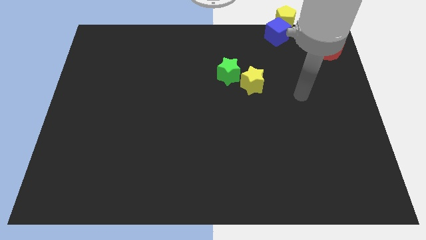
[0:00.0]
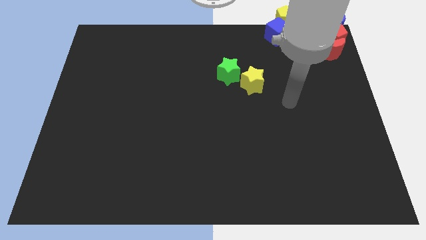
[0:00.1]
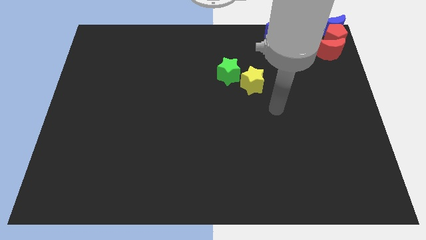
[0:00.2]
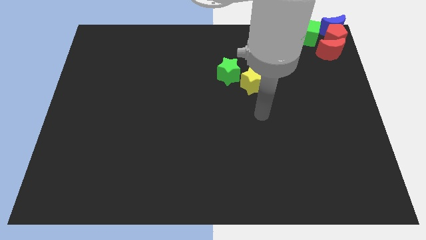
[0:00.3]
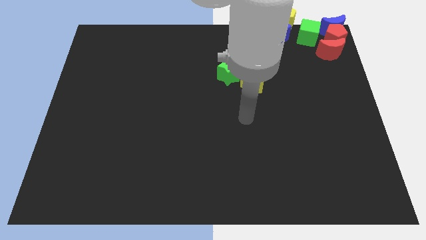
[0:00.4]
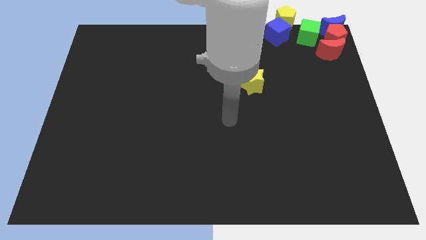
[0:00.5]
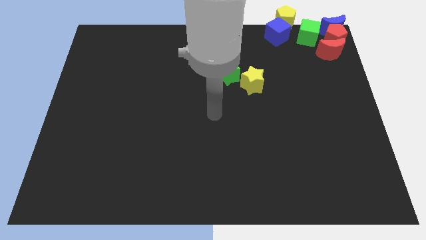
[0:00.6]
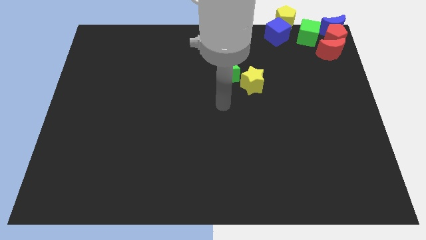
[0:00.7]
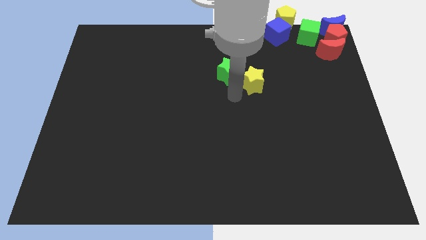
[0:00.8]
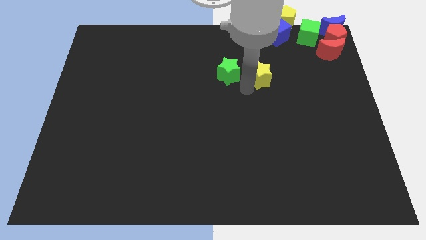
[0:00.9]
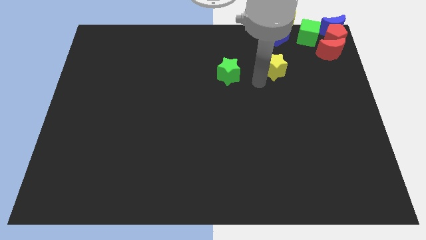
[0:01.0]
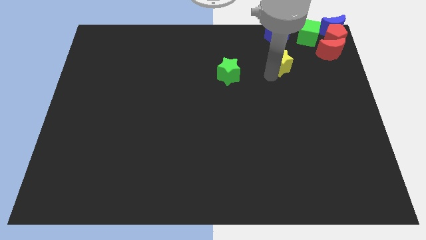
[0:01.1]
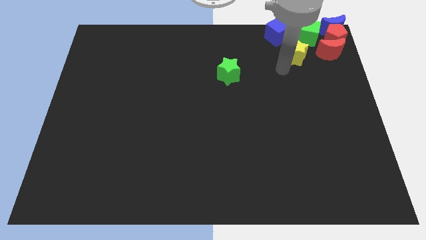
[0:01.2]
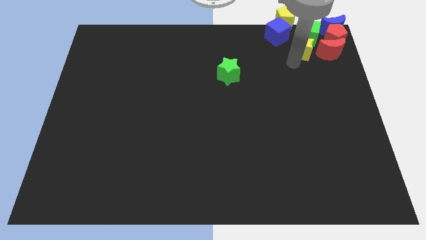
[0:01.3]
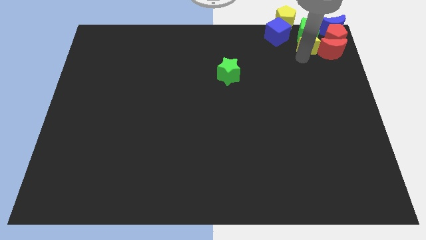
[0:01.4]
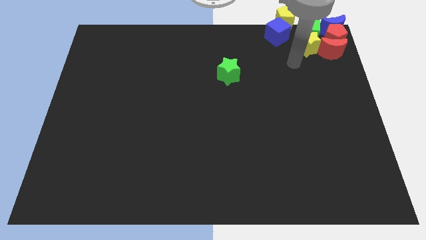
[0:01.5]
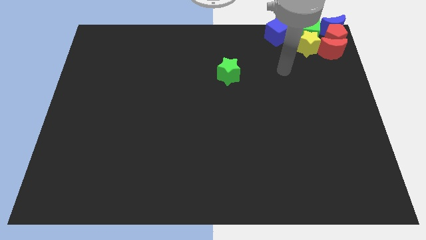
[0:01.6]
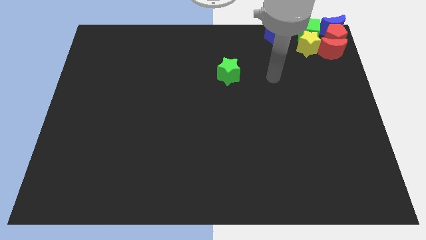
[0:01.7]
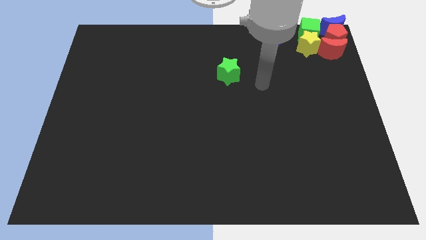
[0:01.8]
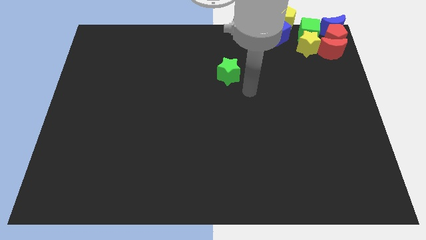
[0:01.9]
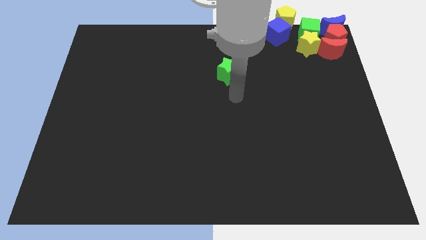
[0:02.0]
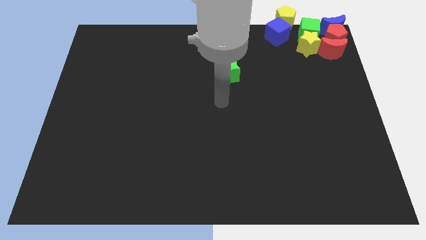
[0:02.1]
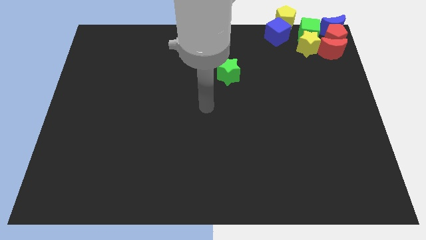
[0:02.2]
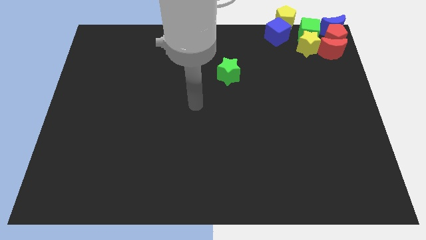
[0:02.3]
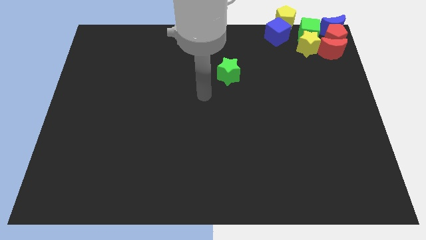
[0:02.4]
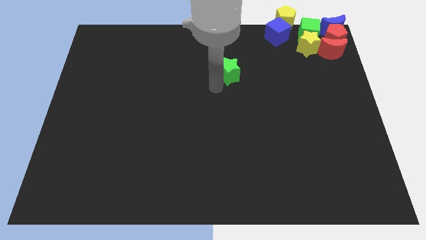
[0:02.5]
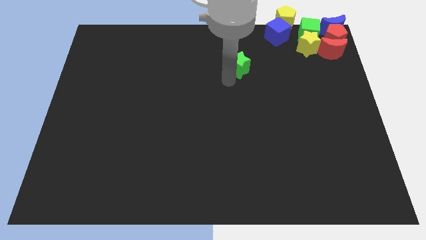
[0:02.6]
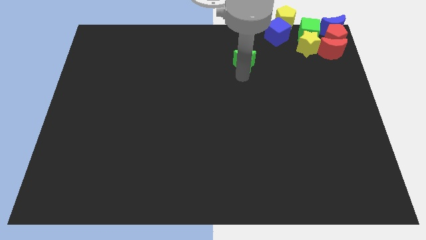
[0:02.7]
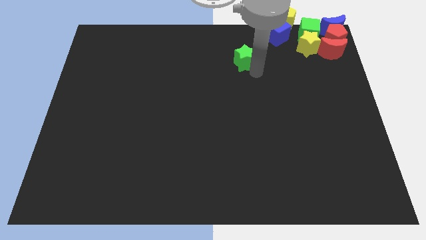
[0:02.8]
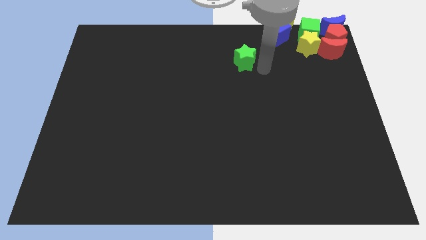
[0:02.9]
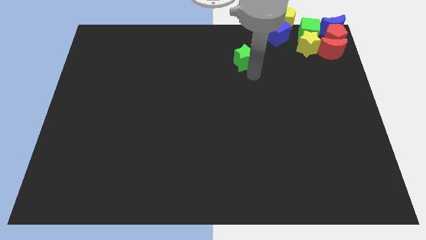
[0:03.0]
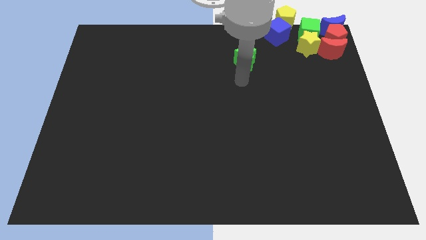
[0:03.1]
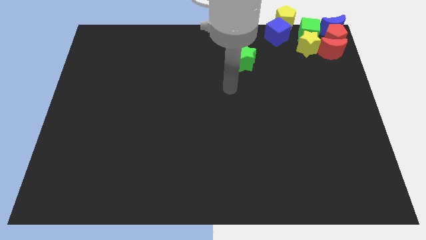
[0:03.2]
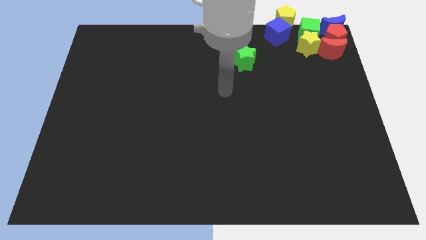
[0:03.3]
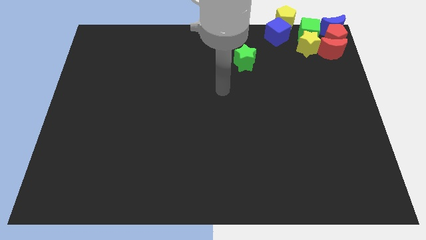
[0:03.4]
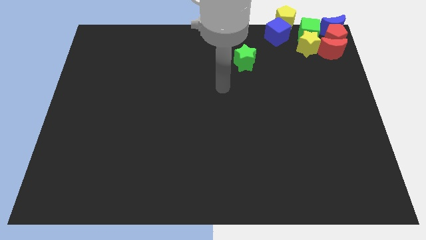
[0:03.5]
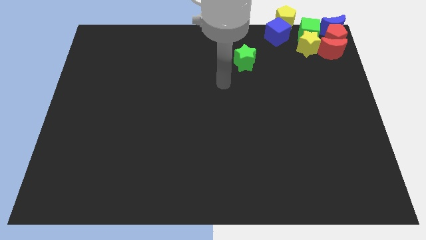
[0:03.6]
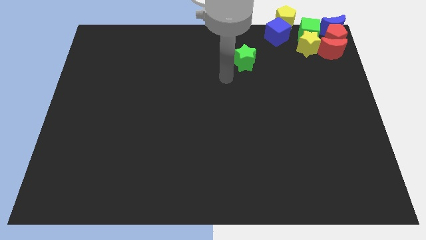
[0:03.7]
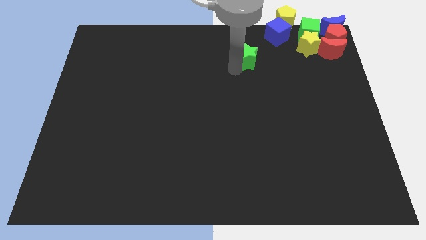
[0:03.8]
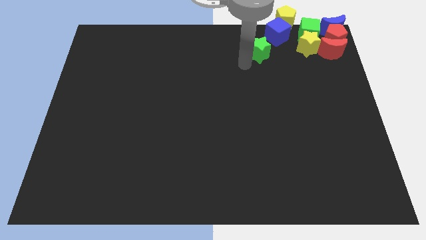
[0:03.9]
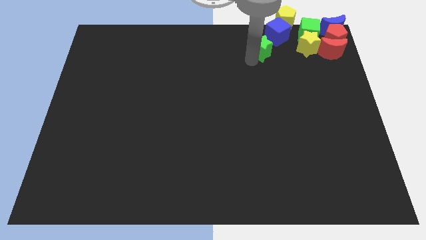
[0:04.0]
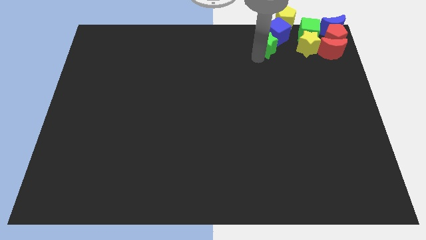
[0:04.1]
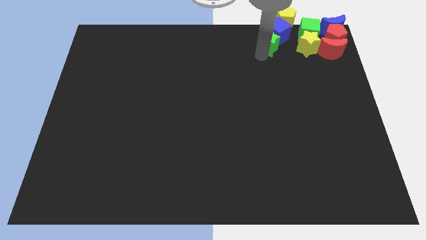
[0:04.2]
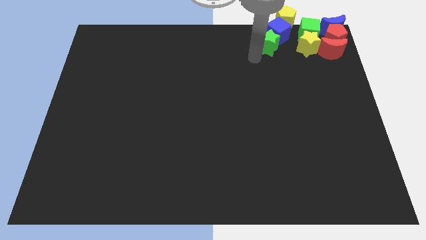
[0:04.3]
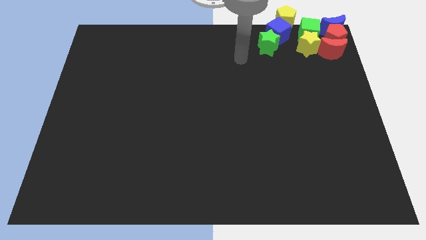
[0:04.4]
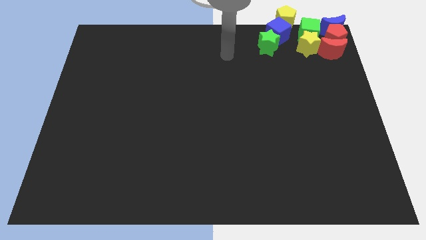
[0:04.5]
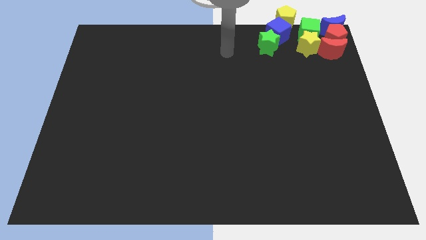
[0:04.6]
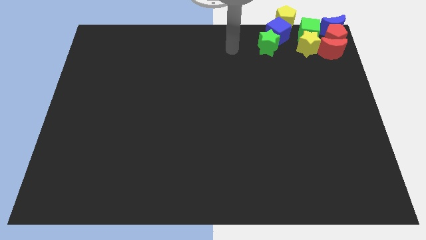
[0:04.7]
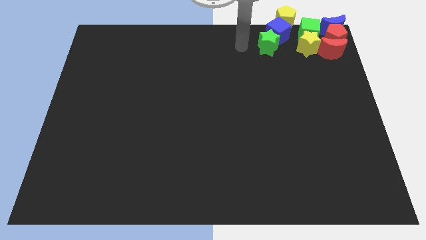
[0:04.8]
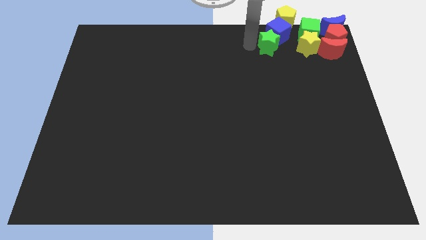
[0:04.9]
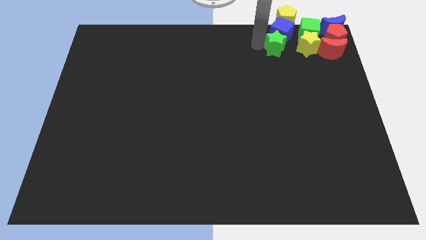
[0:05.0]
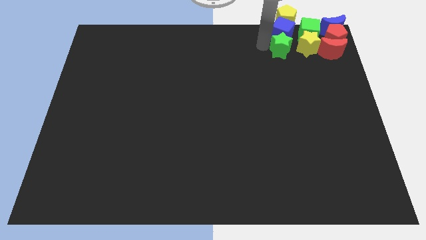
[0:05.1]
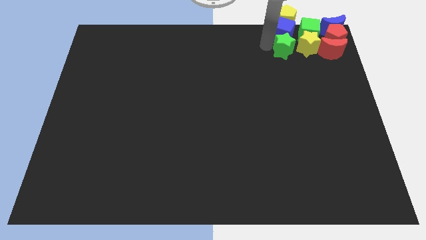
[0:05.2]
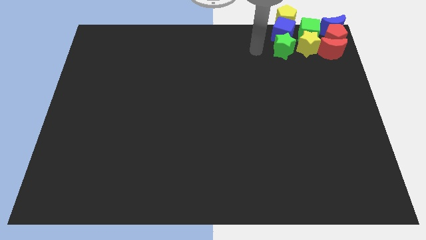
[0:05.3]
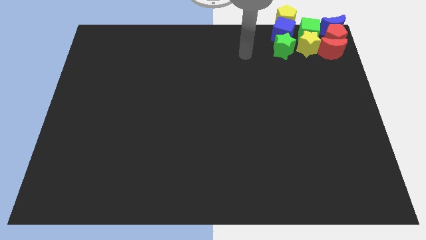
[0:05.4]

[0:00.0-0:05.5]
move the yellow star and the green star into the group of the blocks

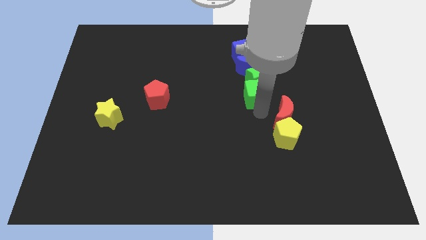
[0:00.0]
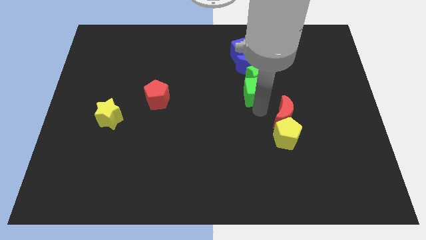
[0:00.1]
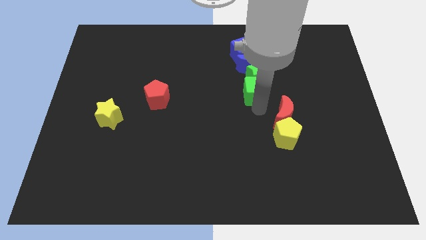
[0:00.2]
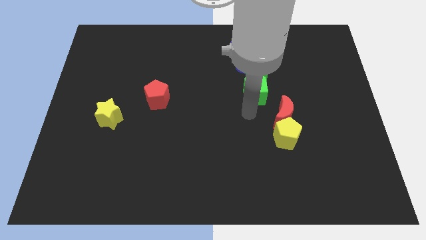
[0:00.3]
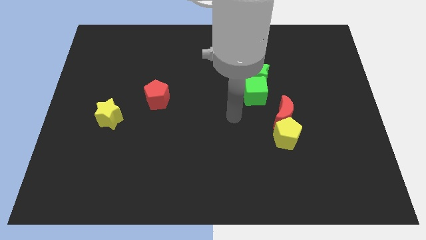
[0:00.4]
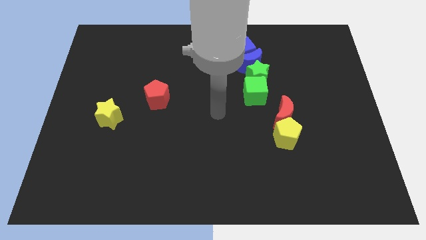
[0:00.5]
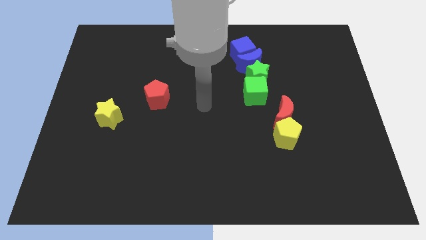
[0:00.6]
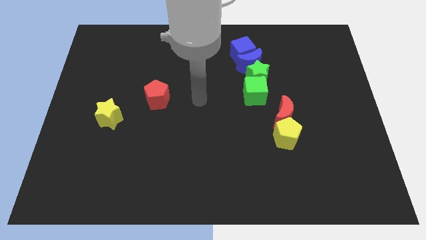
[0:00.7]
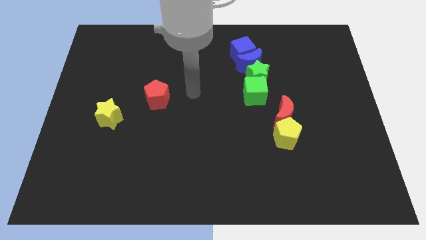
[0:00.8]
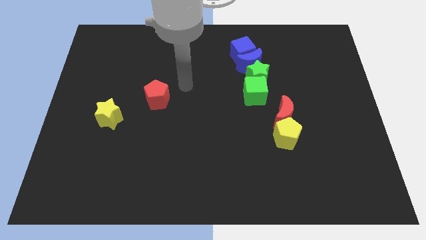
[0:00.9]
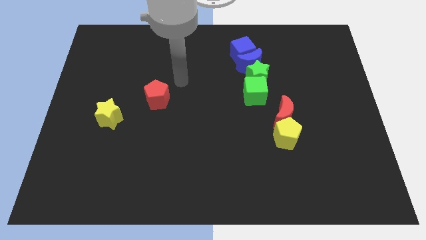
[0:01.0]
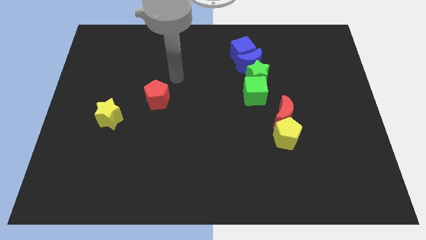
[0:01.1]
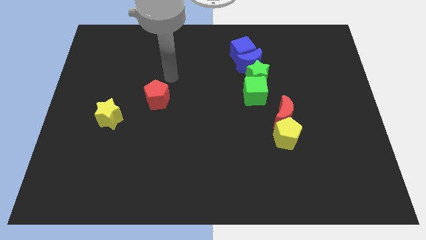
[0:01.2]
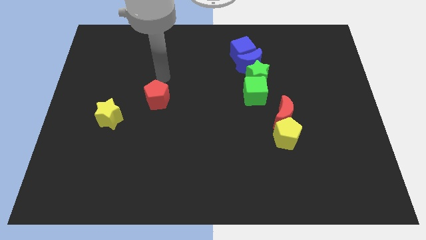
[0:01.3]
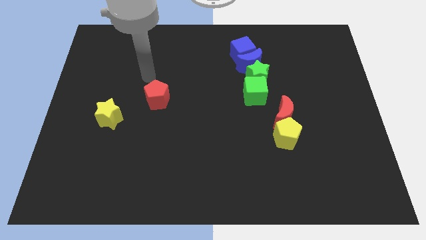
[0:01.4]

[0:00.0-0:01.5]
move the arm away from the green cube

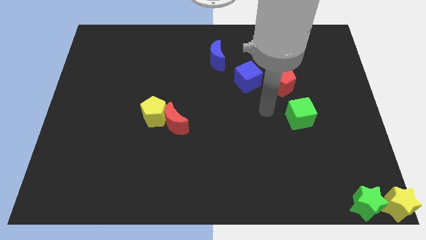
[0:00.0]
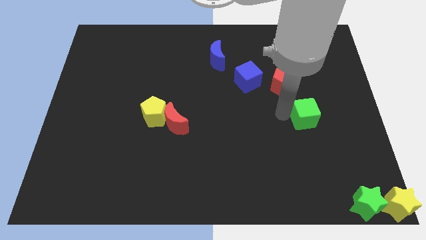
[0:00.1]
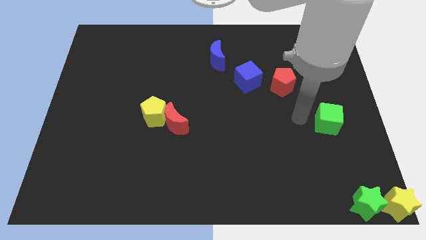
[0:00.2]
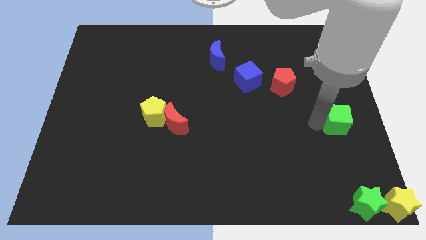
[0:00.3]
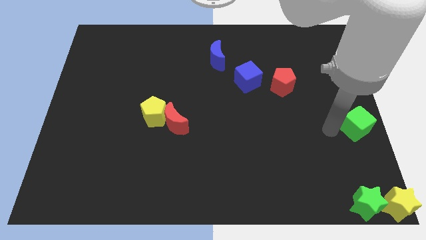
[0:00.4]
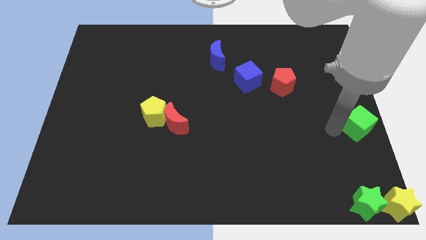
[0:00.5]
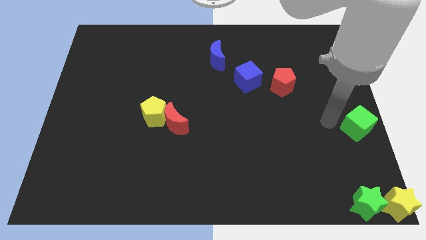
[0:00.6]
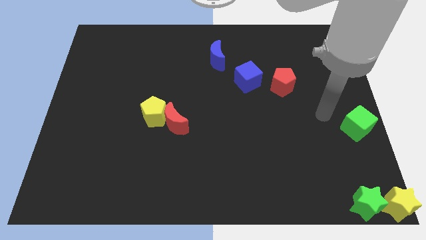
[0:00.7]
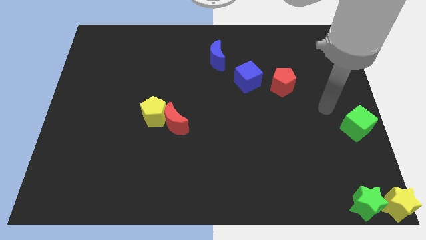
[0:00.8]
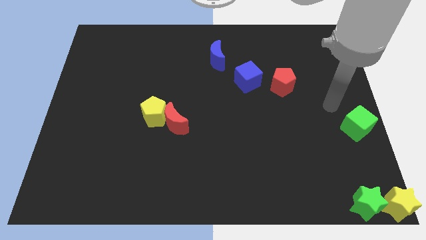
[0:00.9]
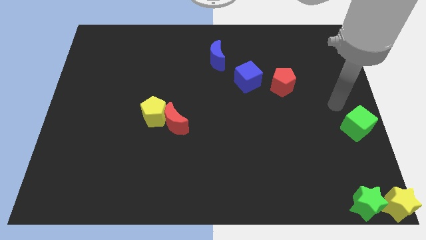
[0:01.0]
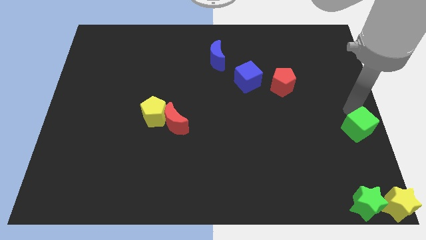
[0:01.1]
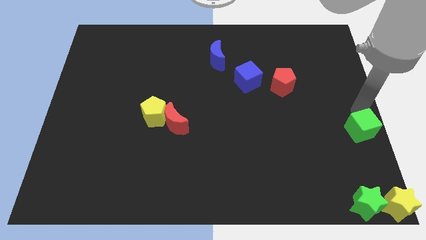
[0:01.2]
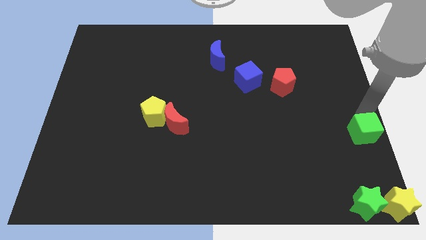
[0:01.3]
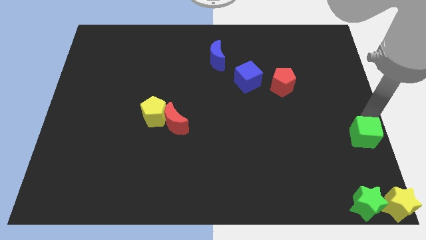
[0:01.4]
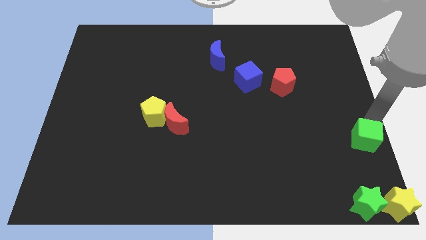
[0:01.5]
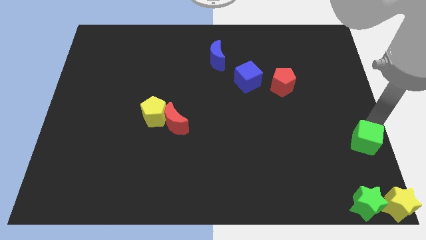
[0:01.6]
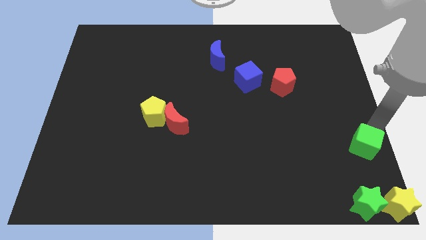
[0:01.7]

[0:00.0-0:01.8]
place the green cube on top of the green star
